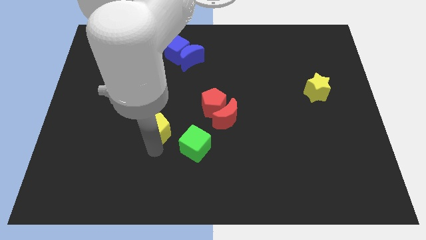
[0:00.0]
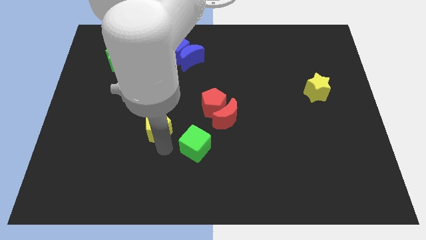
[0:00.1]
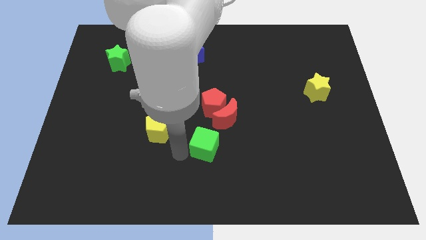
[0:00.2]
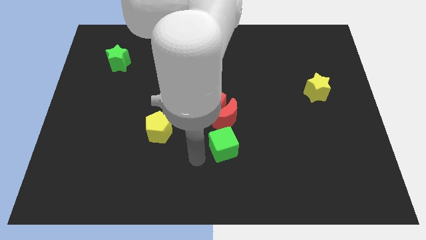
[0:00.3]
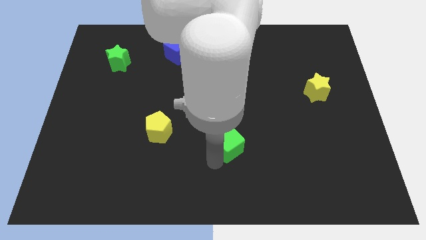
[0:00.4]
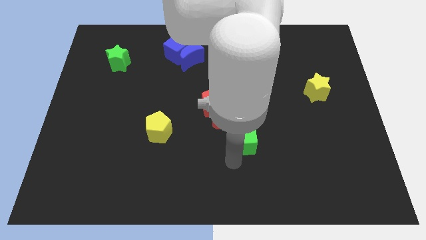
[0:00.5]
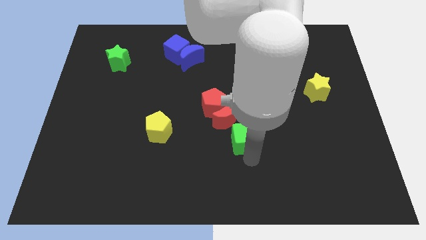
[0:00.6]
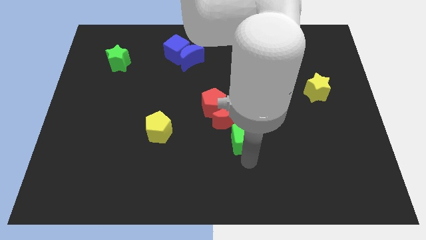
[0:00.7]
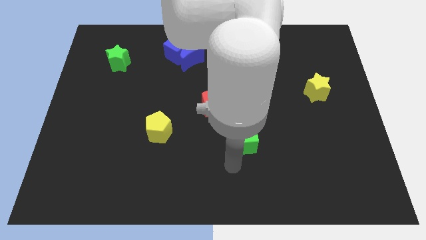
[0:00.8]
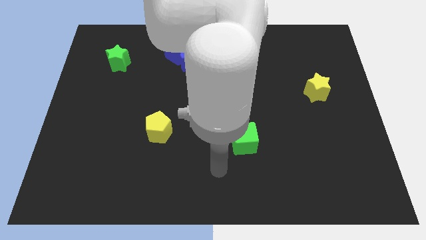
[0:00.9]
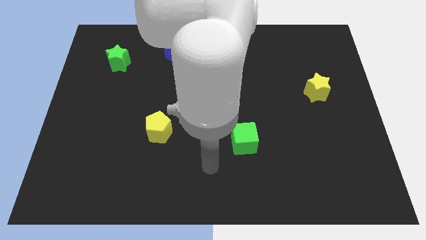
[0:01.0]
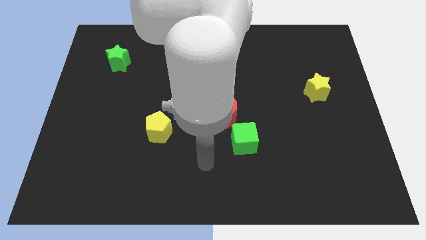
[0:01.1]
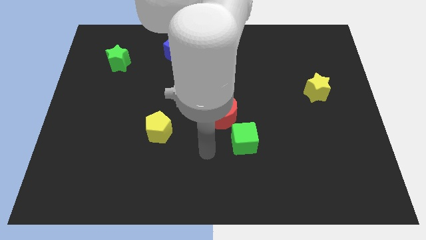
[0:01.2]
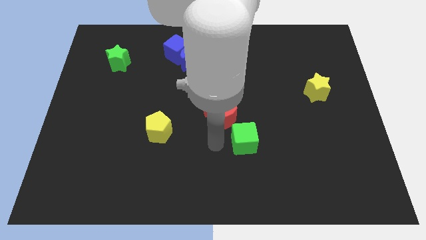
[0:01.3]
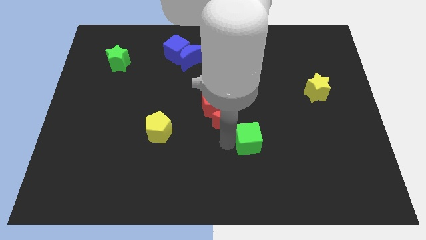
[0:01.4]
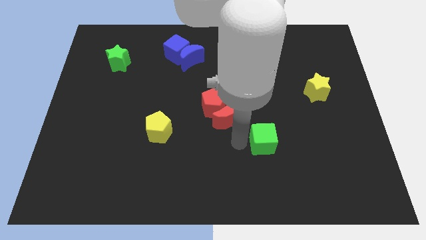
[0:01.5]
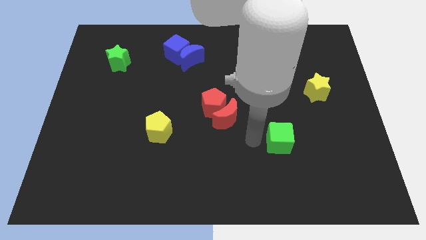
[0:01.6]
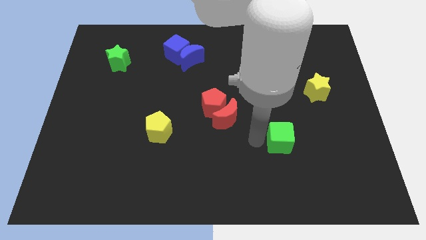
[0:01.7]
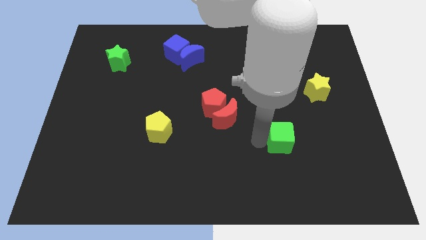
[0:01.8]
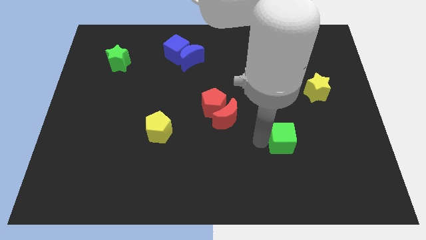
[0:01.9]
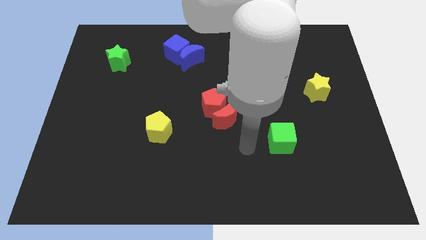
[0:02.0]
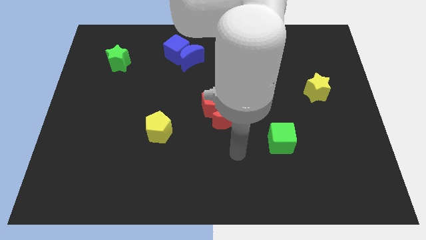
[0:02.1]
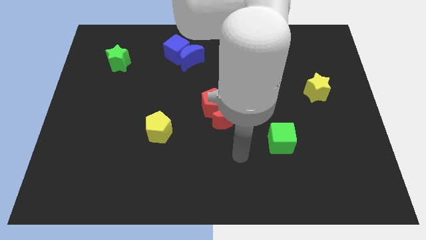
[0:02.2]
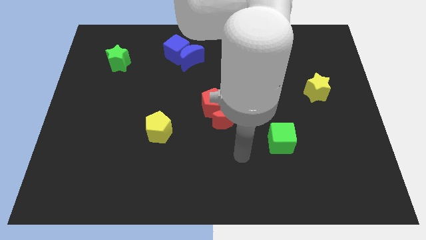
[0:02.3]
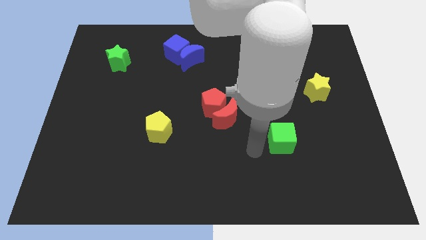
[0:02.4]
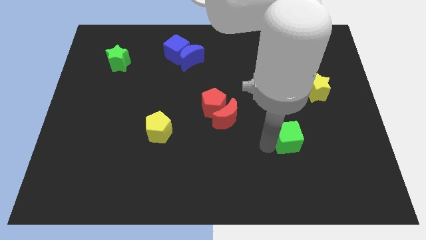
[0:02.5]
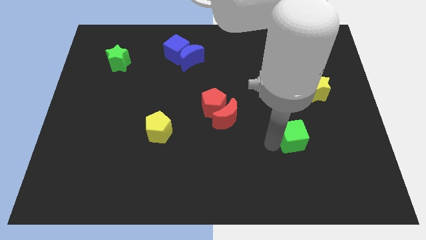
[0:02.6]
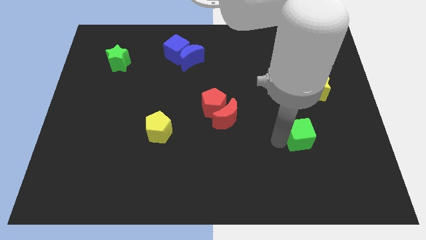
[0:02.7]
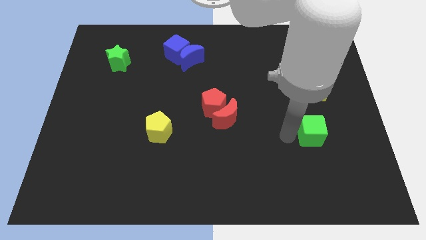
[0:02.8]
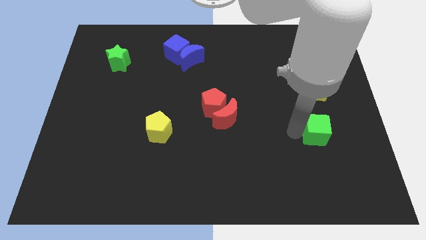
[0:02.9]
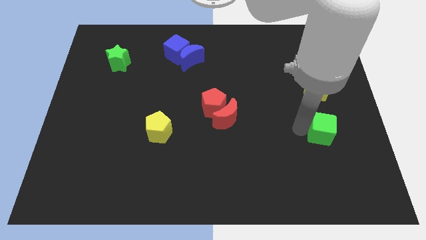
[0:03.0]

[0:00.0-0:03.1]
move the green cube to the bottom side of the yellow star

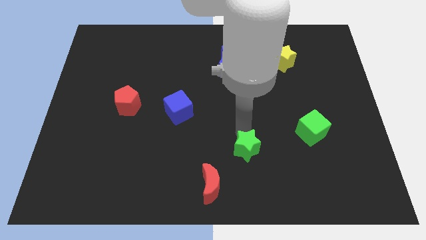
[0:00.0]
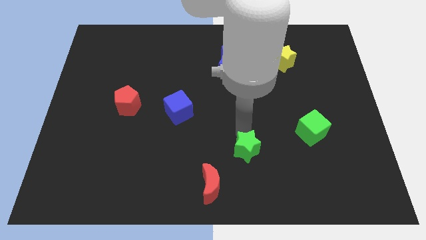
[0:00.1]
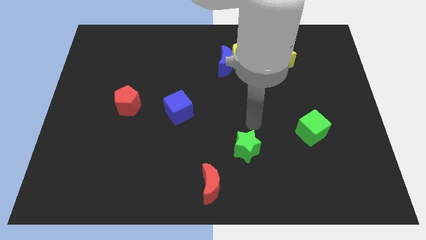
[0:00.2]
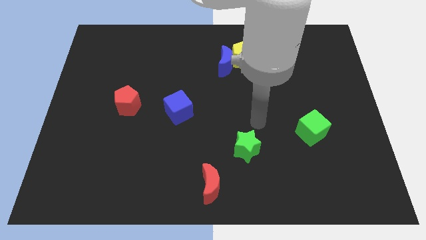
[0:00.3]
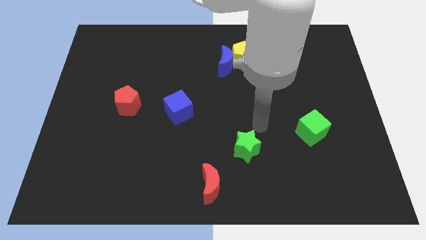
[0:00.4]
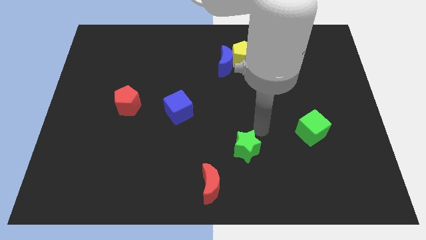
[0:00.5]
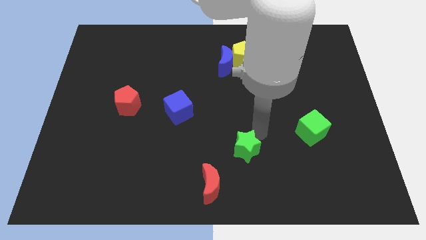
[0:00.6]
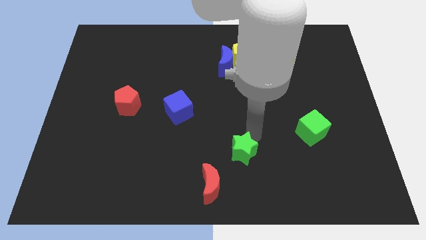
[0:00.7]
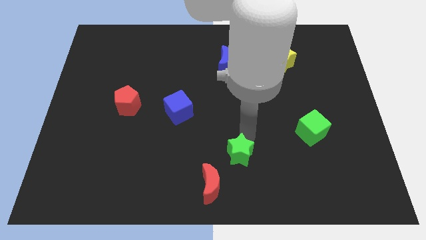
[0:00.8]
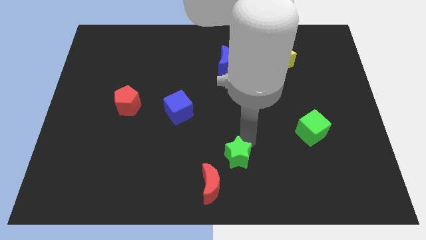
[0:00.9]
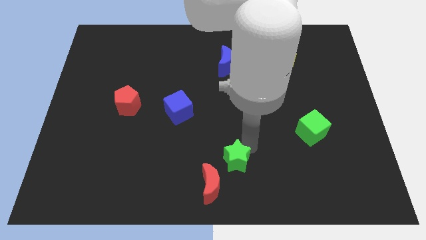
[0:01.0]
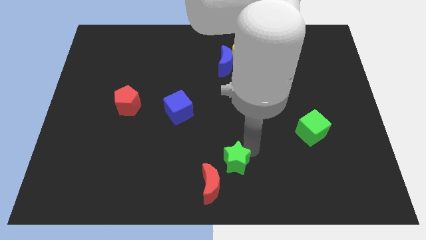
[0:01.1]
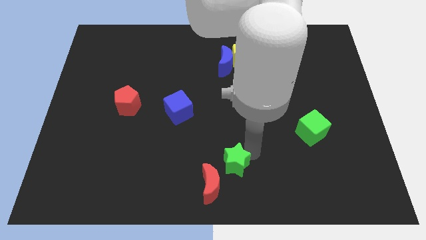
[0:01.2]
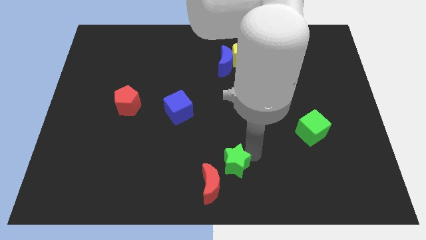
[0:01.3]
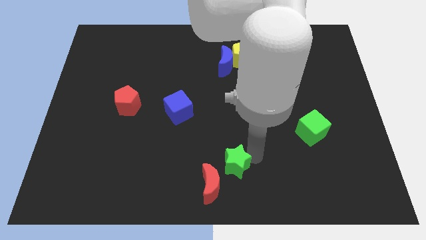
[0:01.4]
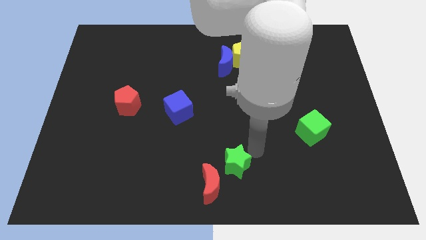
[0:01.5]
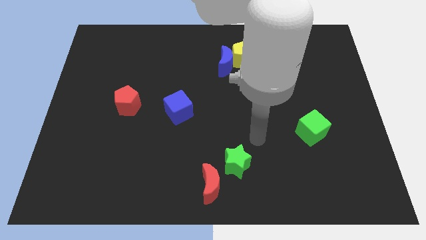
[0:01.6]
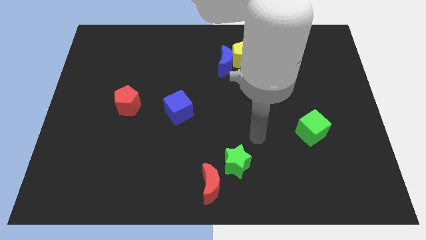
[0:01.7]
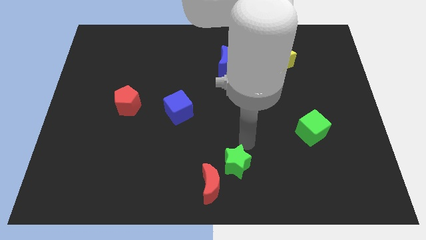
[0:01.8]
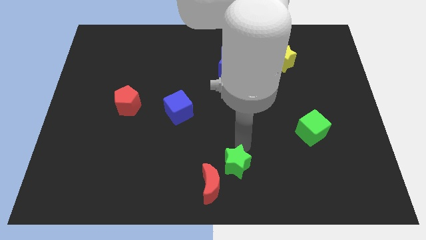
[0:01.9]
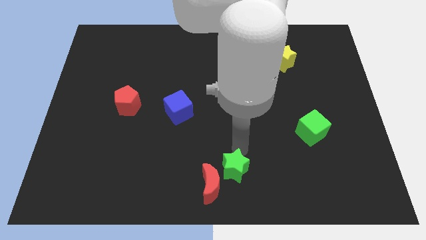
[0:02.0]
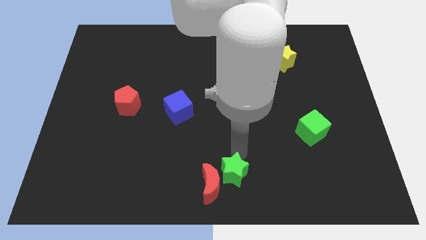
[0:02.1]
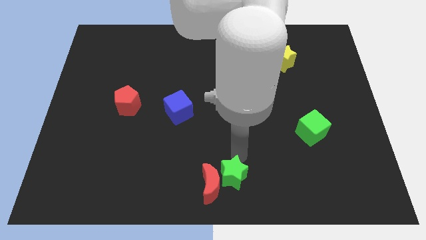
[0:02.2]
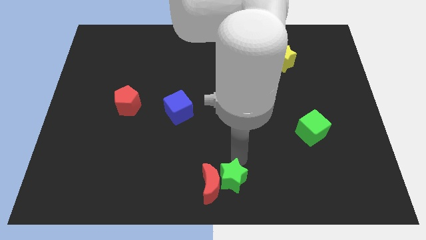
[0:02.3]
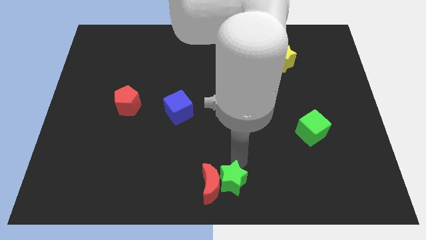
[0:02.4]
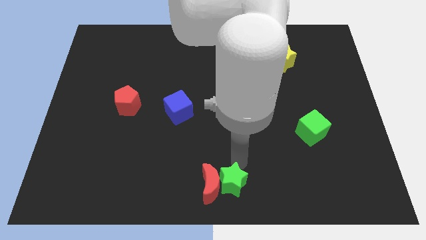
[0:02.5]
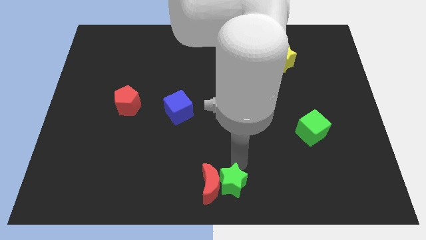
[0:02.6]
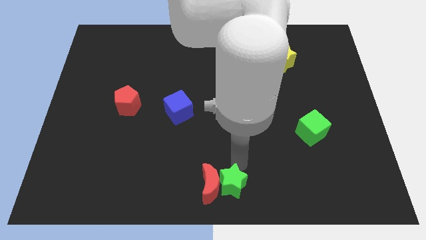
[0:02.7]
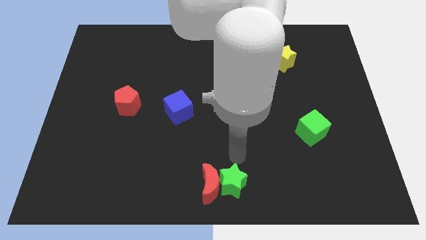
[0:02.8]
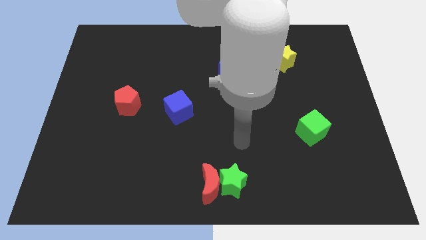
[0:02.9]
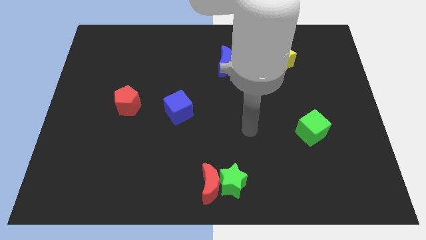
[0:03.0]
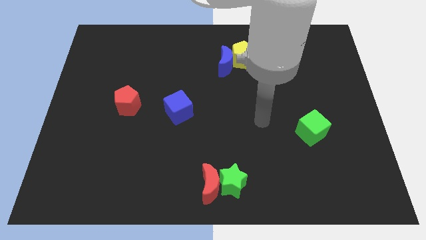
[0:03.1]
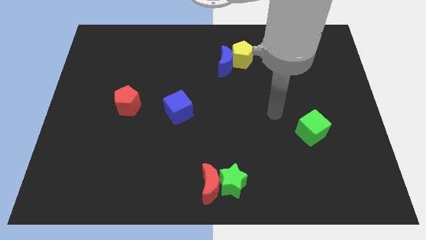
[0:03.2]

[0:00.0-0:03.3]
push the green star beside the red moon

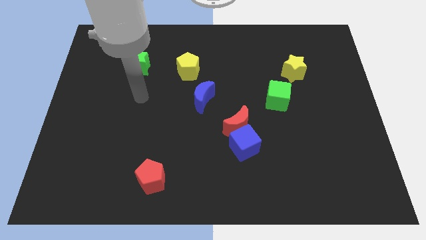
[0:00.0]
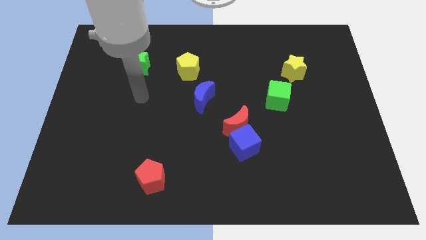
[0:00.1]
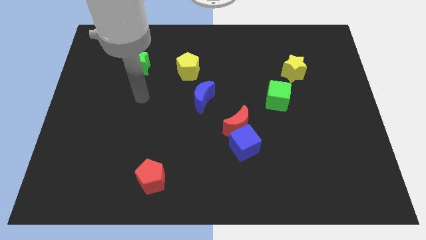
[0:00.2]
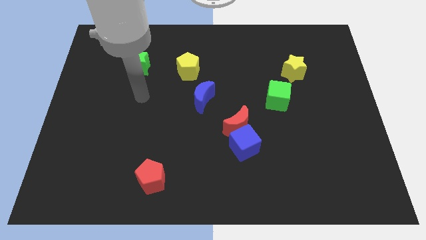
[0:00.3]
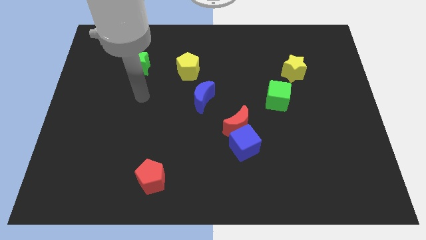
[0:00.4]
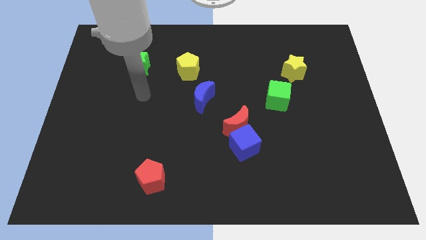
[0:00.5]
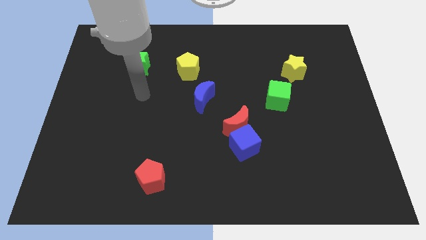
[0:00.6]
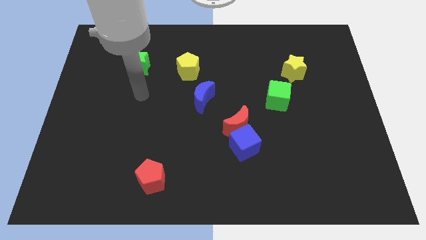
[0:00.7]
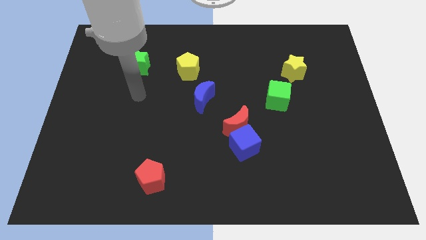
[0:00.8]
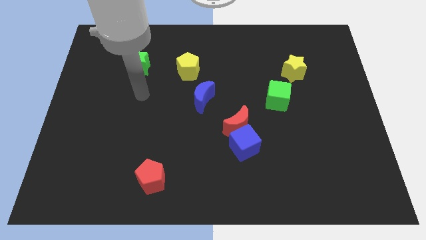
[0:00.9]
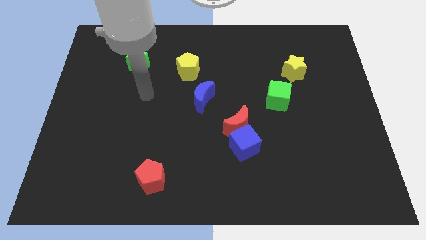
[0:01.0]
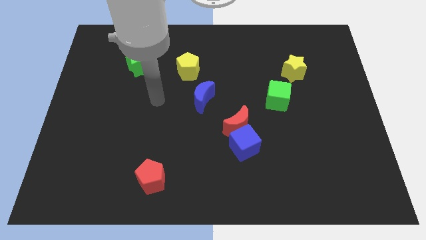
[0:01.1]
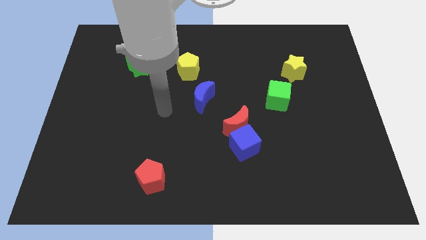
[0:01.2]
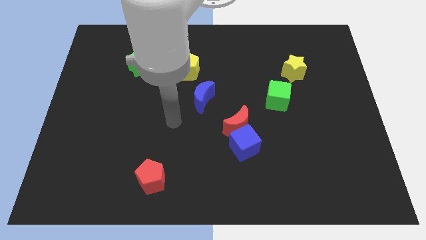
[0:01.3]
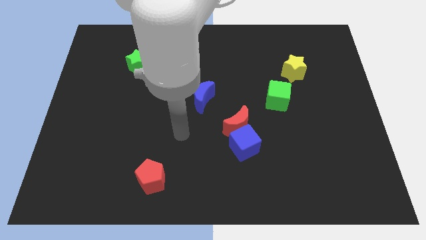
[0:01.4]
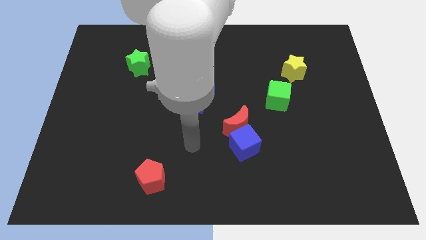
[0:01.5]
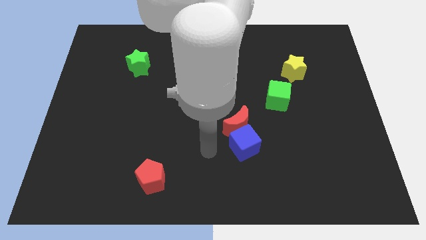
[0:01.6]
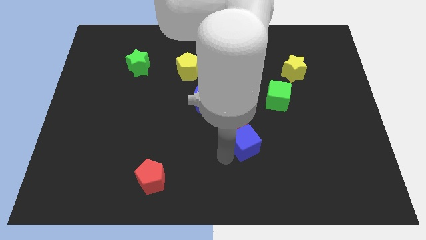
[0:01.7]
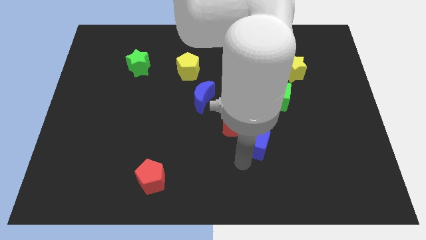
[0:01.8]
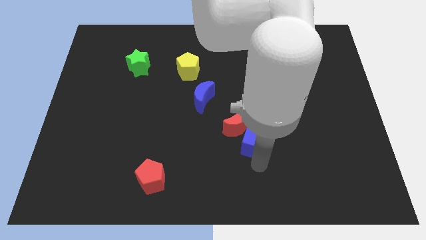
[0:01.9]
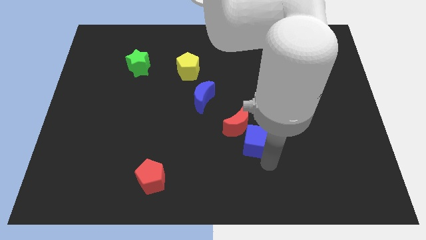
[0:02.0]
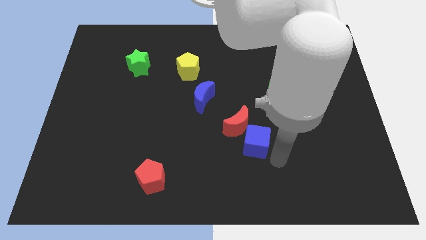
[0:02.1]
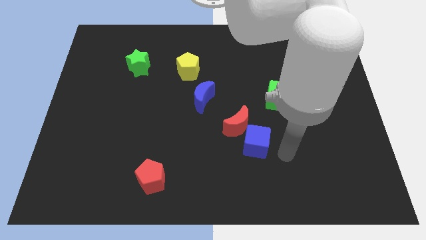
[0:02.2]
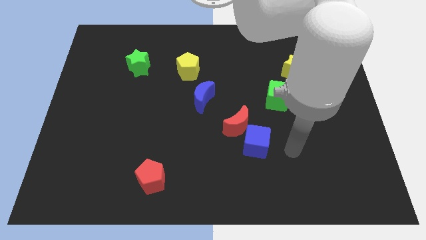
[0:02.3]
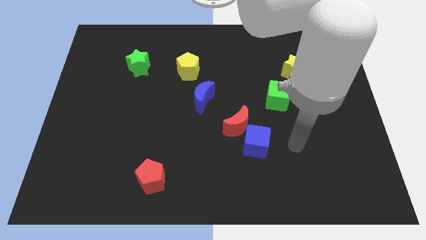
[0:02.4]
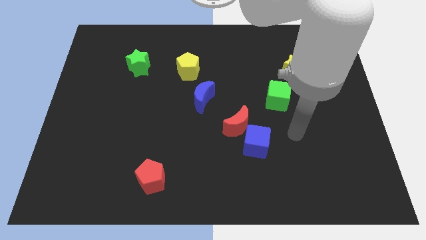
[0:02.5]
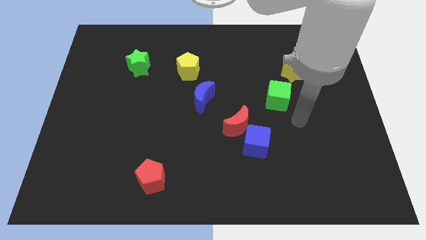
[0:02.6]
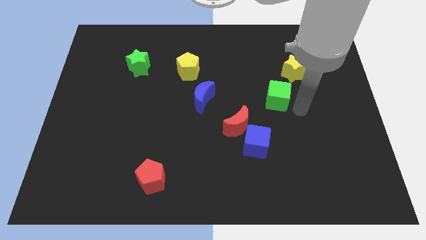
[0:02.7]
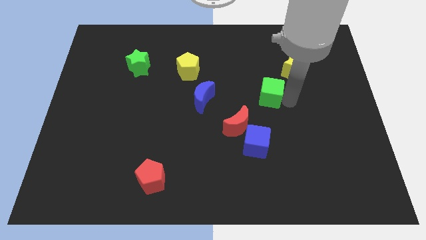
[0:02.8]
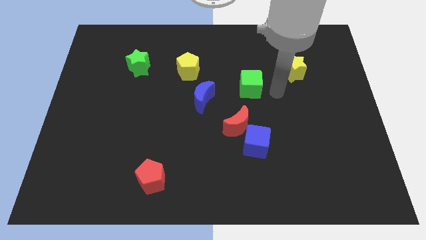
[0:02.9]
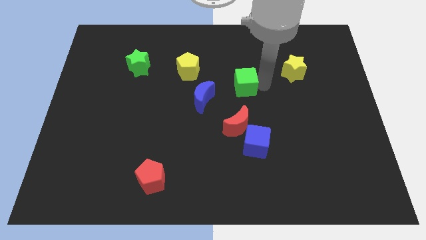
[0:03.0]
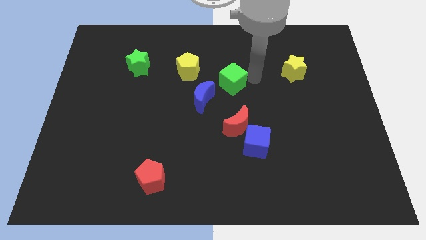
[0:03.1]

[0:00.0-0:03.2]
move the green cube towards the top right of the blue moon
